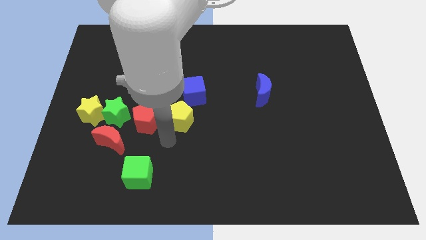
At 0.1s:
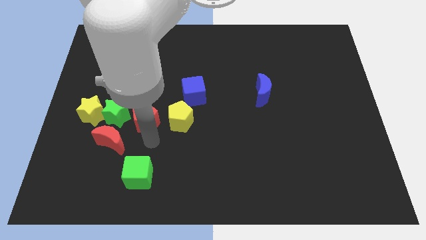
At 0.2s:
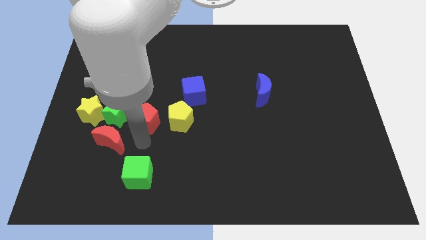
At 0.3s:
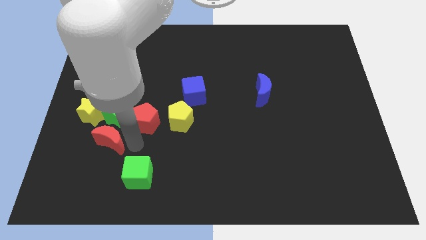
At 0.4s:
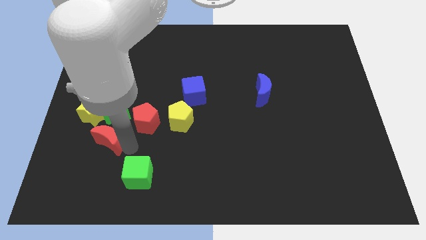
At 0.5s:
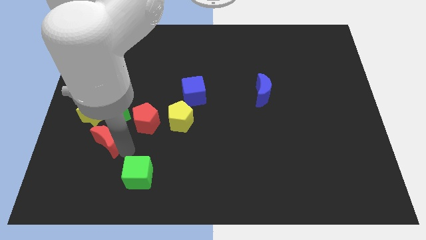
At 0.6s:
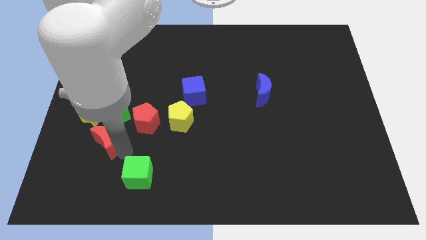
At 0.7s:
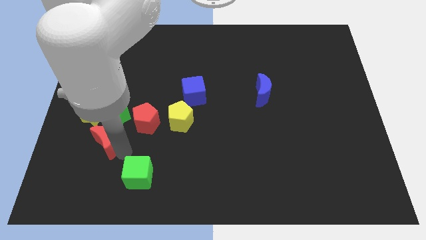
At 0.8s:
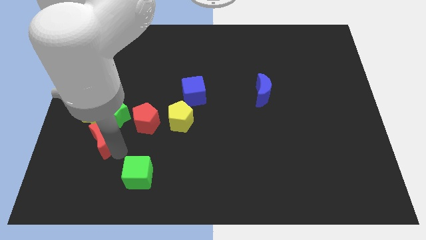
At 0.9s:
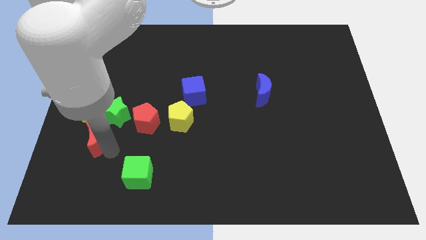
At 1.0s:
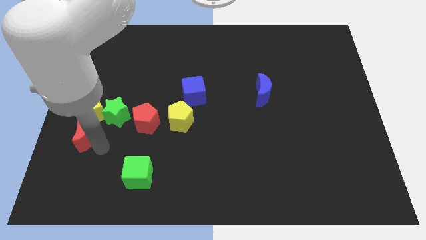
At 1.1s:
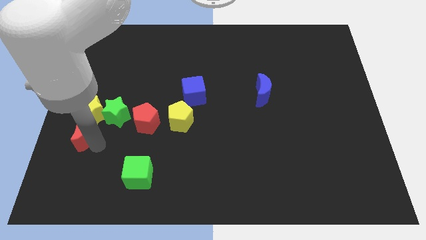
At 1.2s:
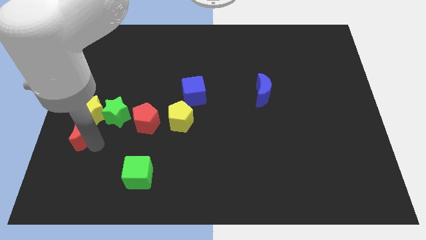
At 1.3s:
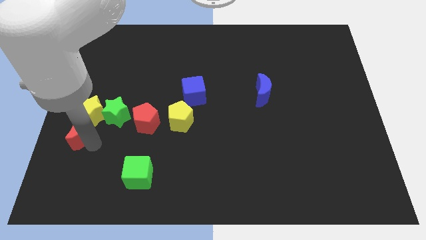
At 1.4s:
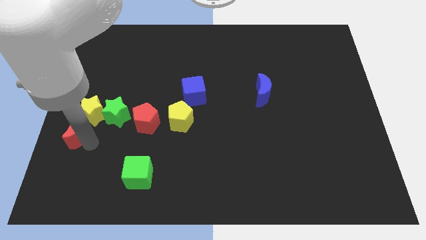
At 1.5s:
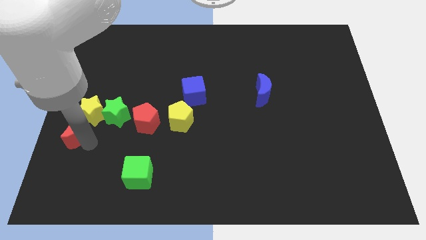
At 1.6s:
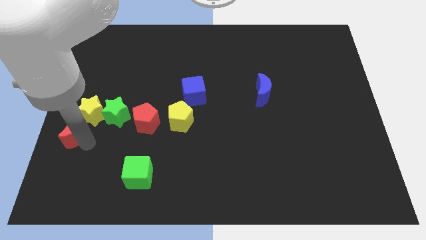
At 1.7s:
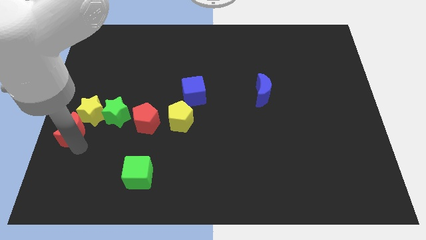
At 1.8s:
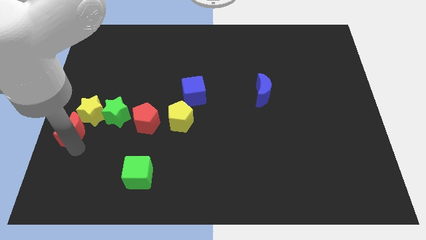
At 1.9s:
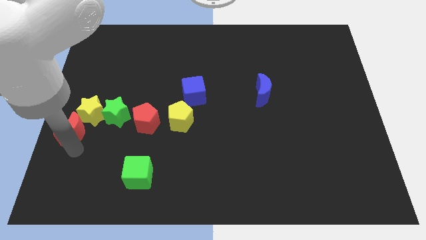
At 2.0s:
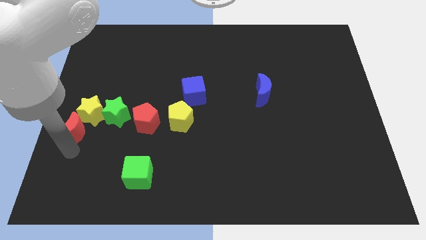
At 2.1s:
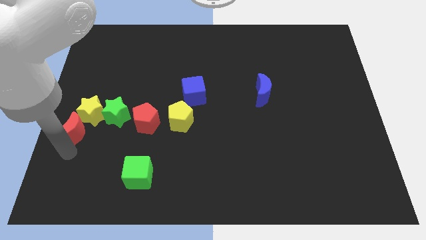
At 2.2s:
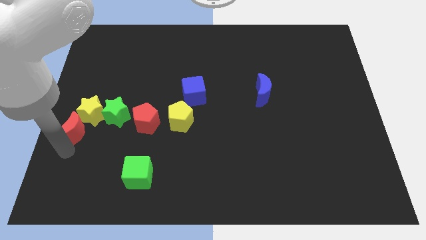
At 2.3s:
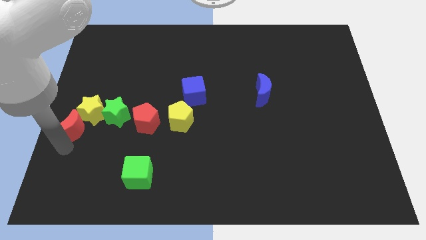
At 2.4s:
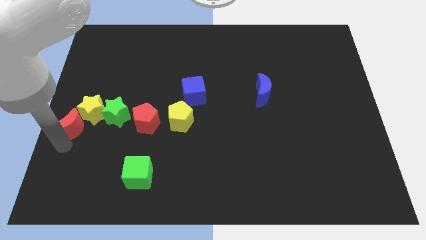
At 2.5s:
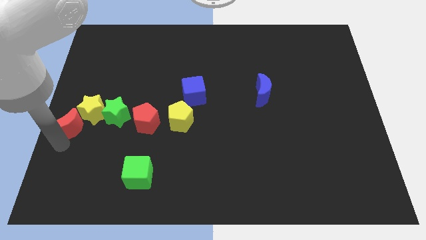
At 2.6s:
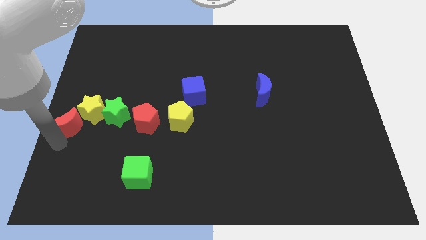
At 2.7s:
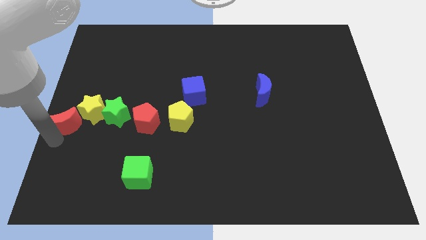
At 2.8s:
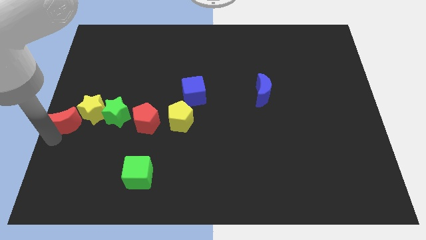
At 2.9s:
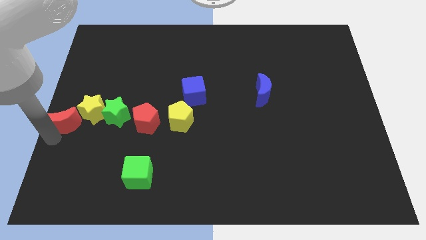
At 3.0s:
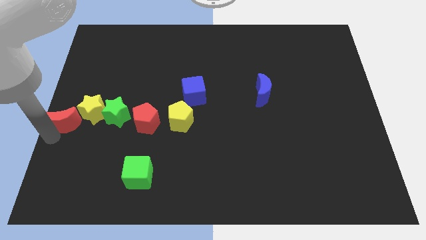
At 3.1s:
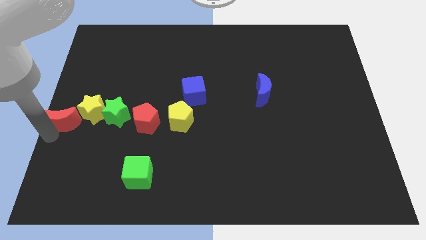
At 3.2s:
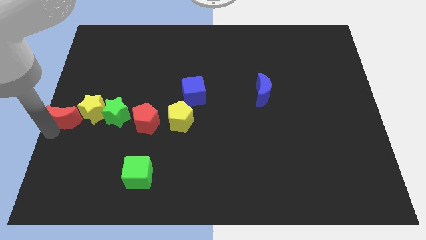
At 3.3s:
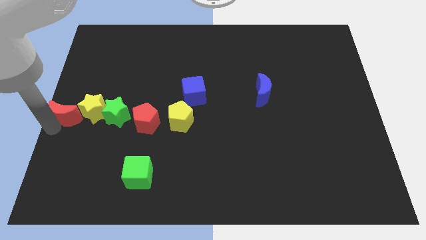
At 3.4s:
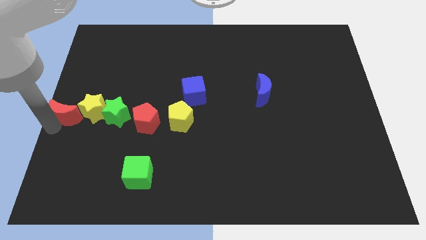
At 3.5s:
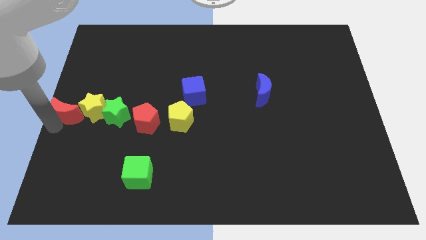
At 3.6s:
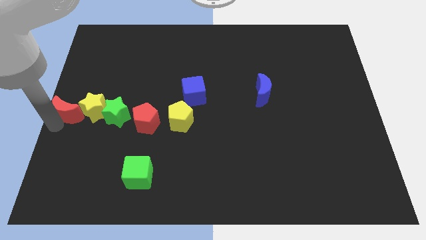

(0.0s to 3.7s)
place the red crescent to the left of the yellow star

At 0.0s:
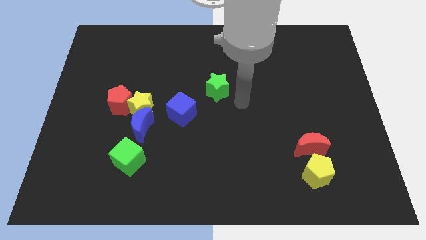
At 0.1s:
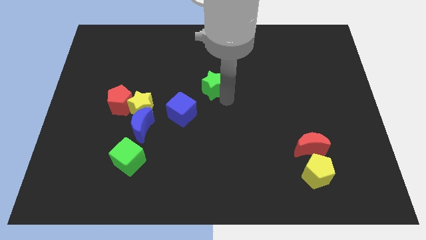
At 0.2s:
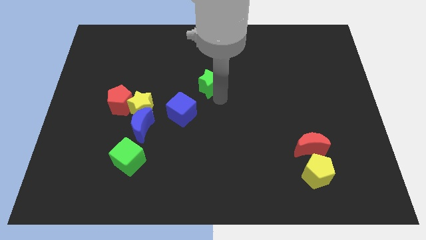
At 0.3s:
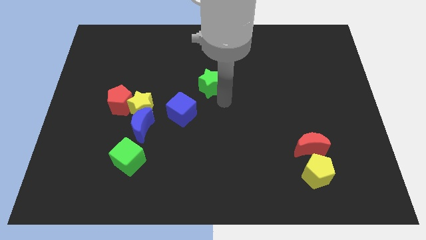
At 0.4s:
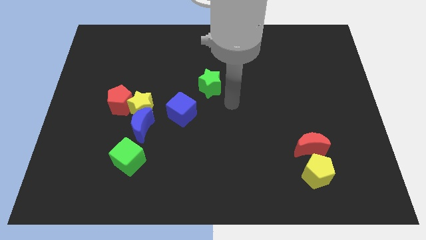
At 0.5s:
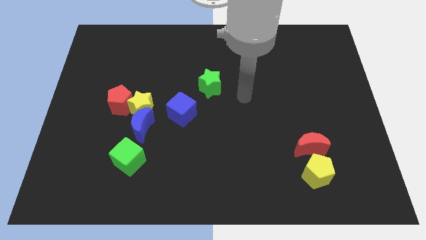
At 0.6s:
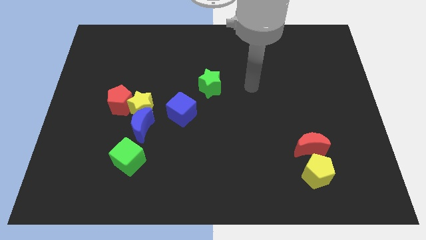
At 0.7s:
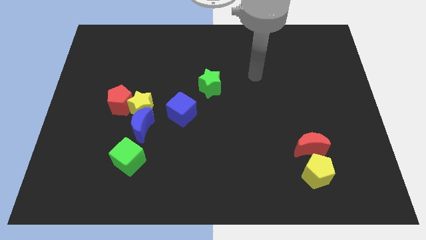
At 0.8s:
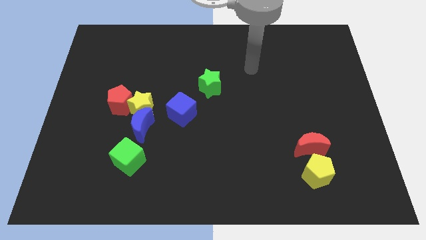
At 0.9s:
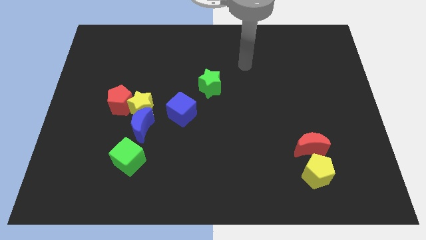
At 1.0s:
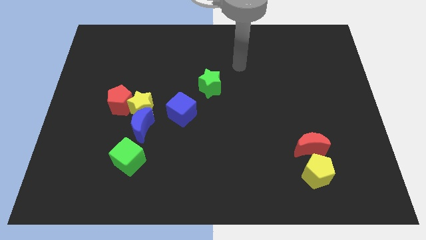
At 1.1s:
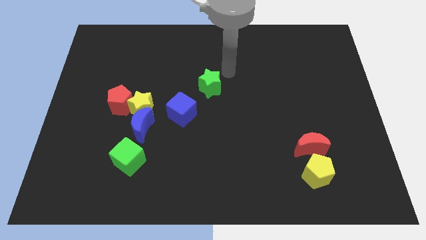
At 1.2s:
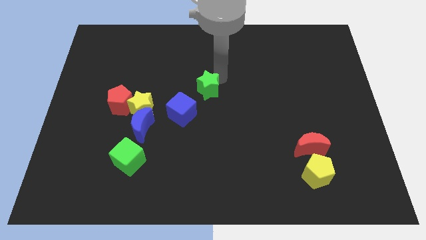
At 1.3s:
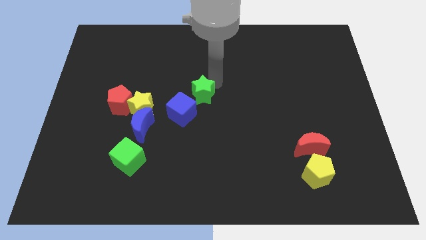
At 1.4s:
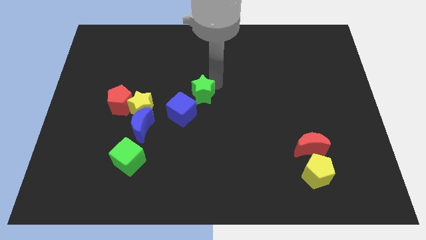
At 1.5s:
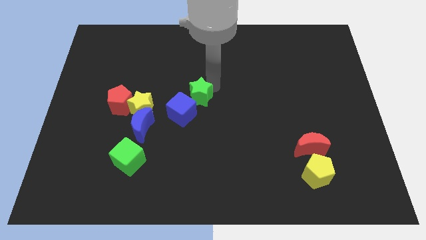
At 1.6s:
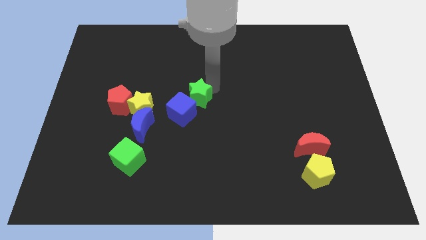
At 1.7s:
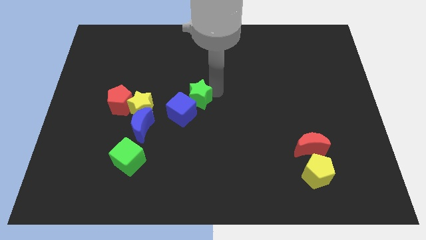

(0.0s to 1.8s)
arrange the green star on the top right of the blue cube

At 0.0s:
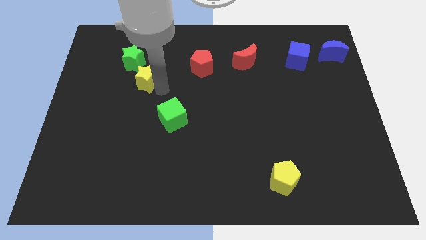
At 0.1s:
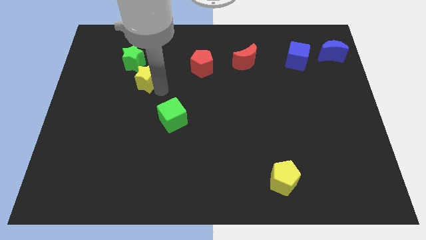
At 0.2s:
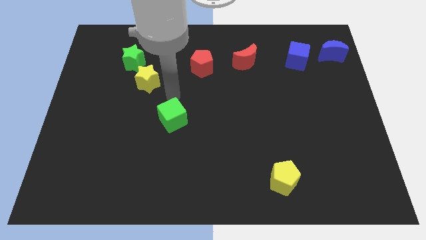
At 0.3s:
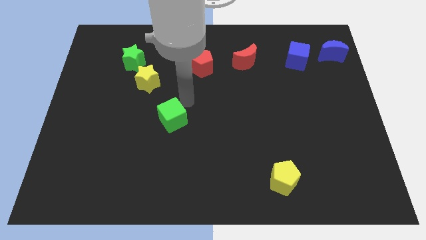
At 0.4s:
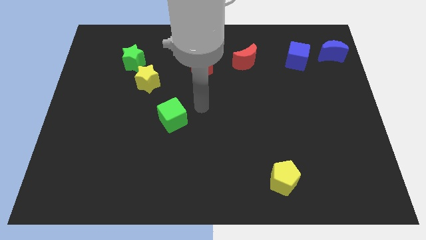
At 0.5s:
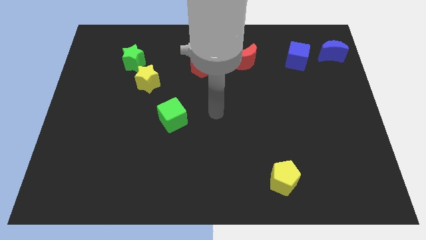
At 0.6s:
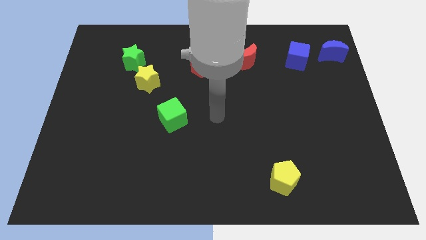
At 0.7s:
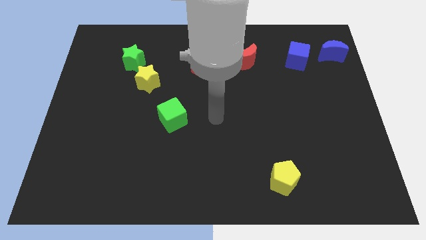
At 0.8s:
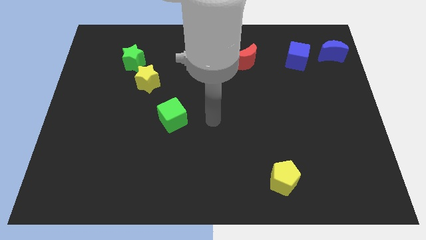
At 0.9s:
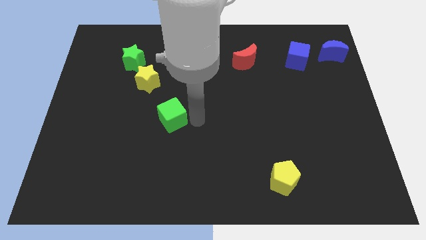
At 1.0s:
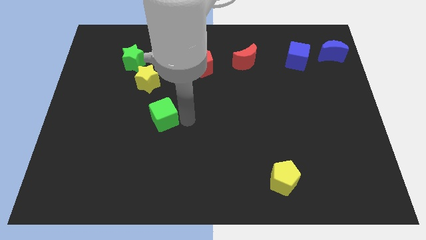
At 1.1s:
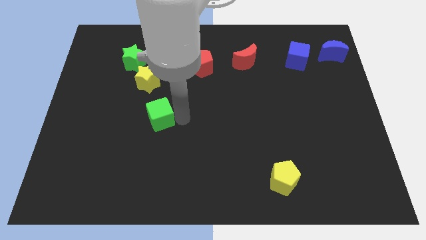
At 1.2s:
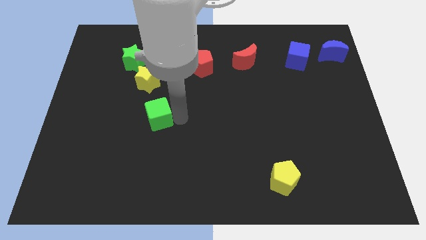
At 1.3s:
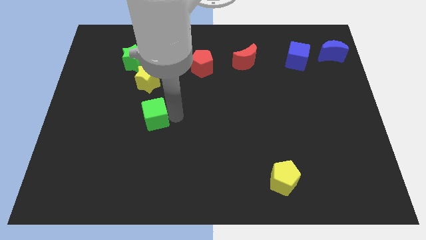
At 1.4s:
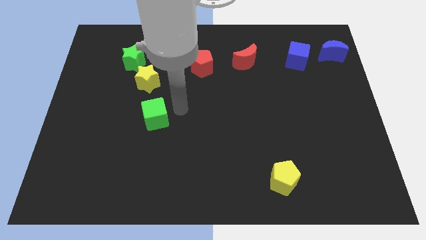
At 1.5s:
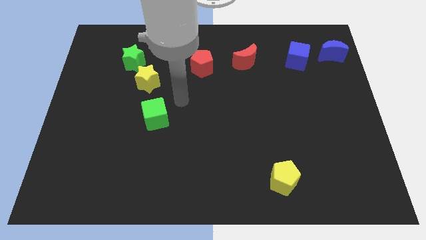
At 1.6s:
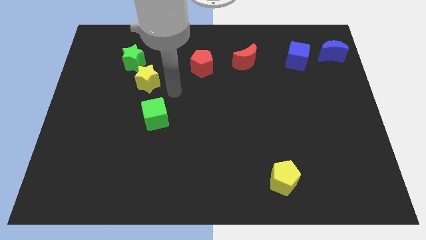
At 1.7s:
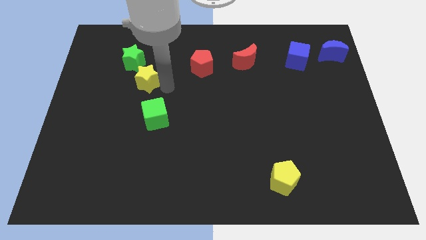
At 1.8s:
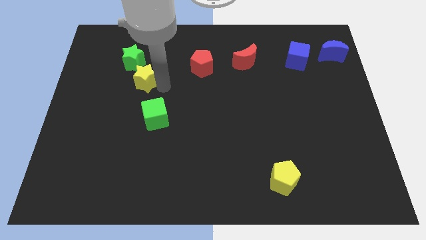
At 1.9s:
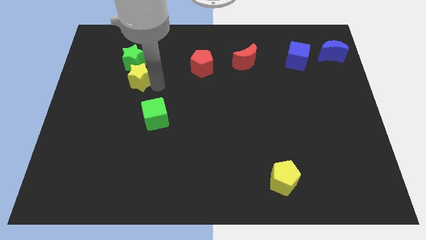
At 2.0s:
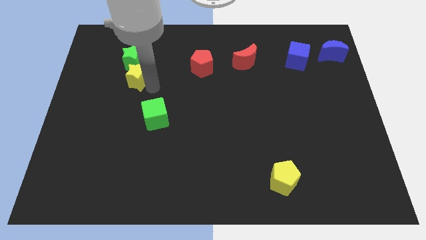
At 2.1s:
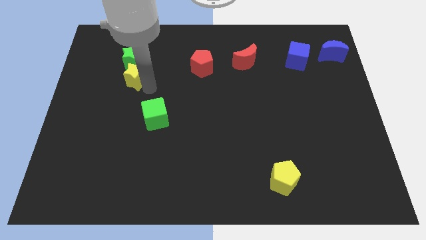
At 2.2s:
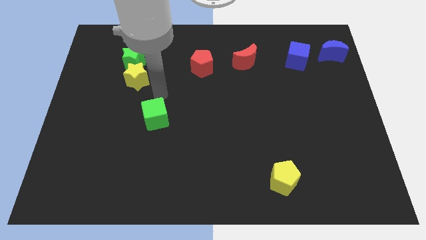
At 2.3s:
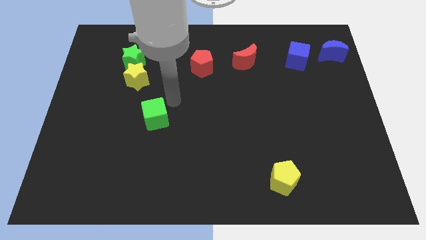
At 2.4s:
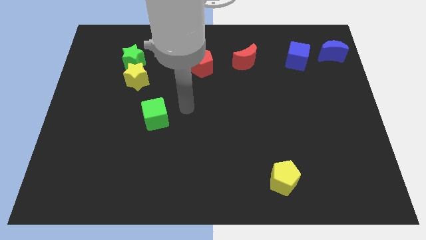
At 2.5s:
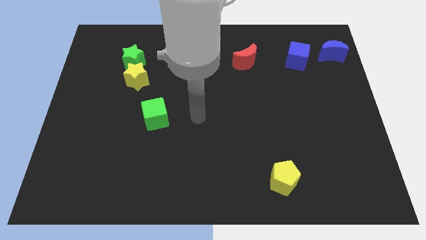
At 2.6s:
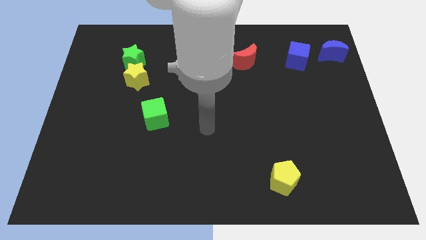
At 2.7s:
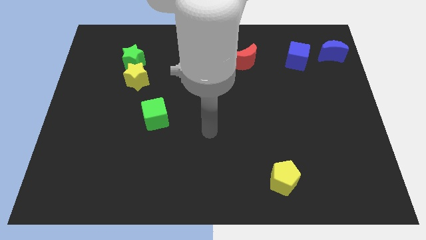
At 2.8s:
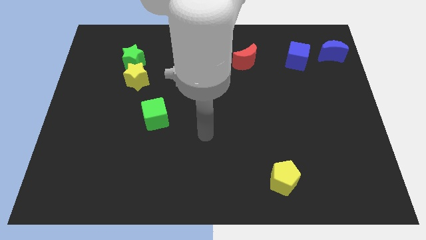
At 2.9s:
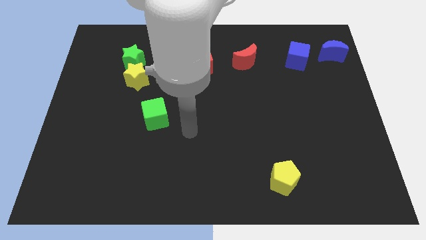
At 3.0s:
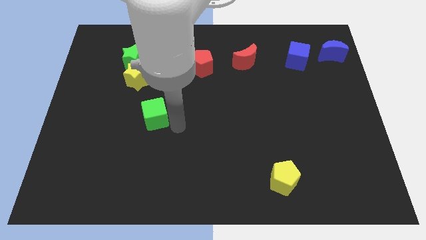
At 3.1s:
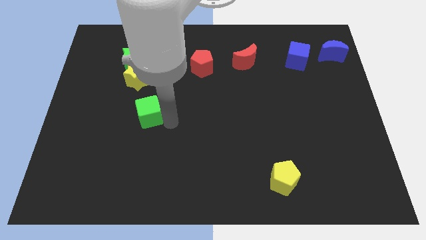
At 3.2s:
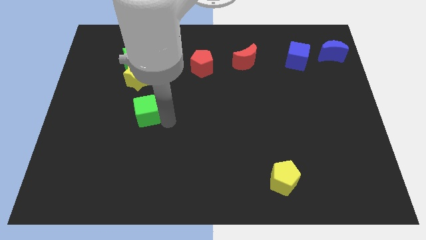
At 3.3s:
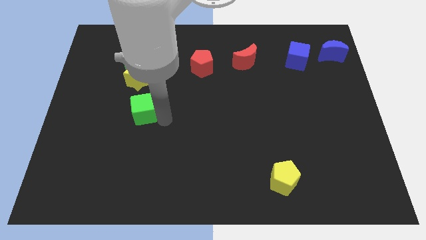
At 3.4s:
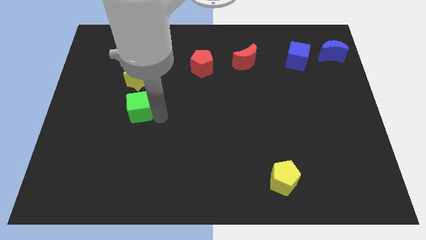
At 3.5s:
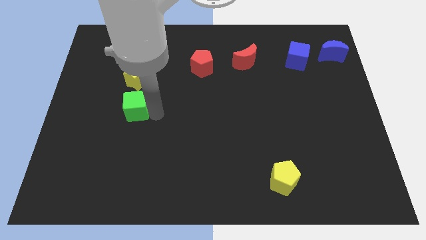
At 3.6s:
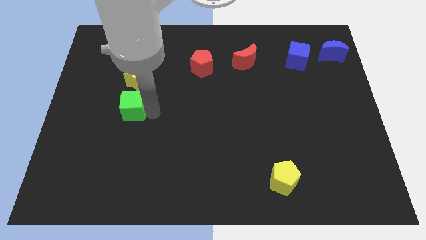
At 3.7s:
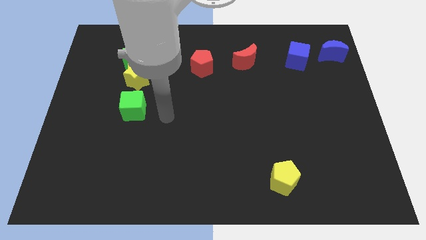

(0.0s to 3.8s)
add the green square to the vertical line of green star and yellow star
